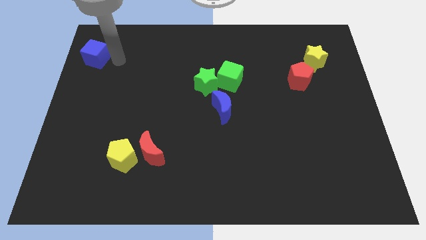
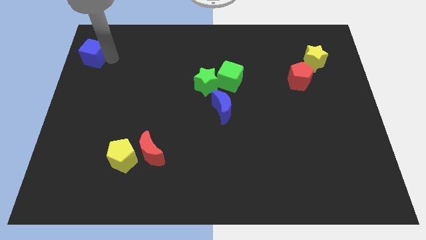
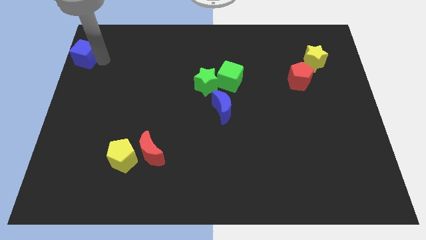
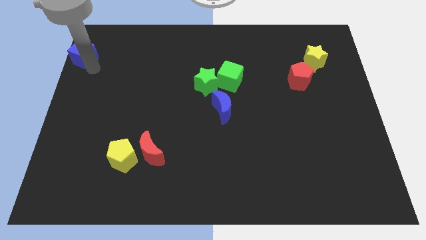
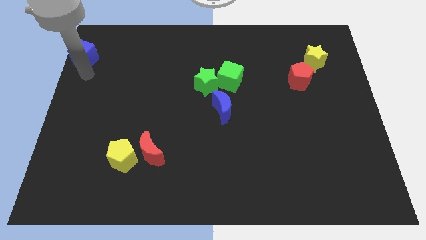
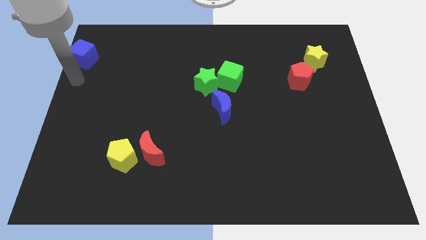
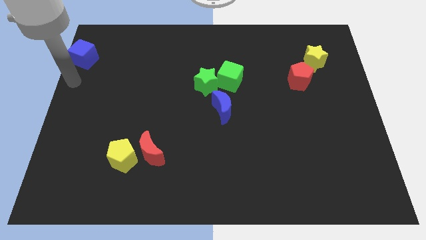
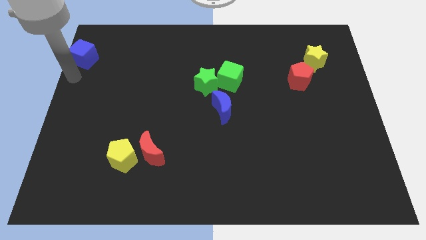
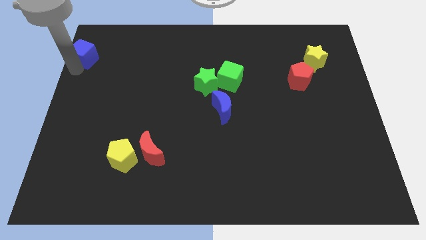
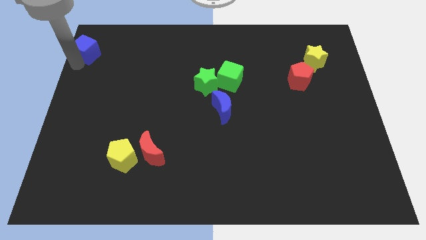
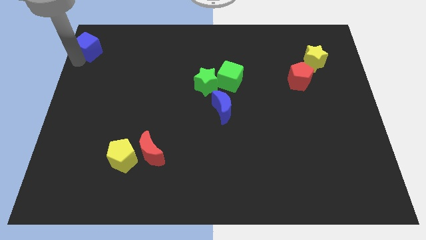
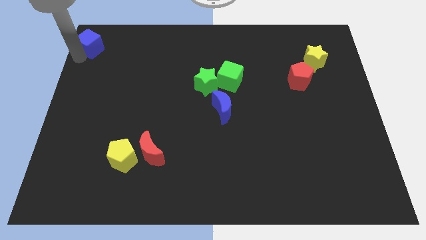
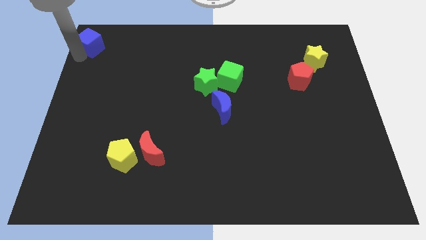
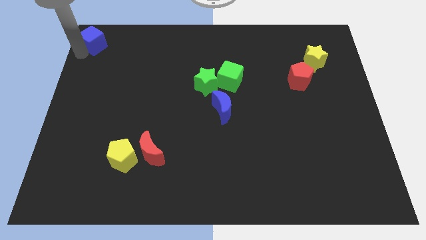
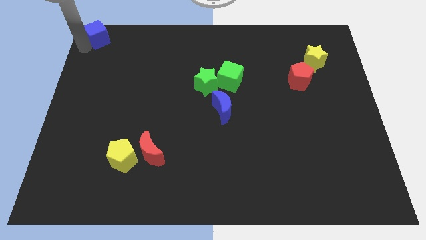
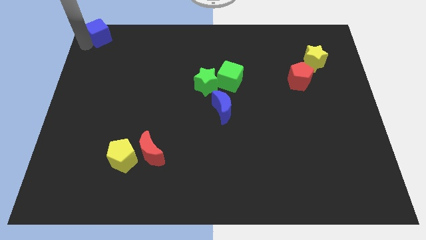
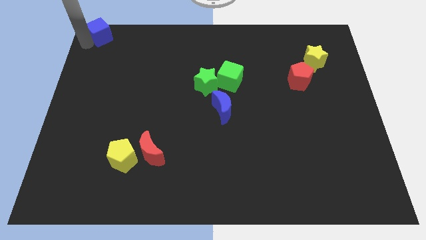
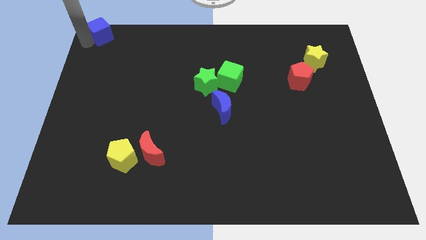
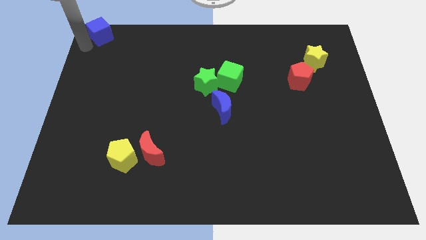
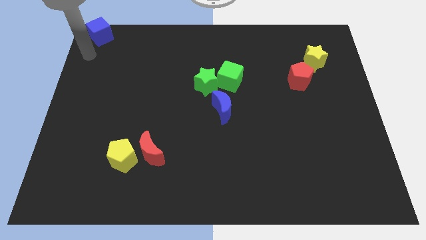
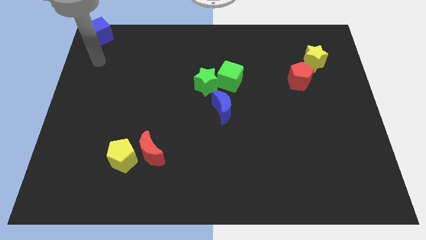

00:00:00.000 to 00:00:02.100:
slide blue cube to the top left

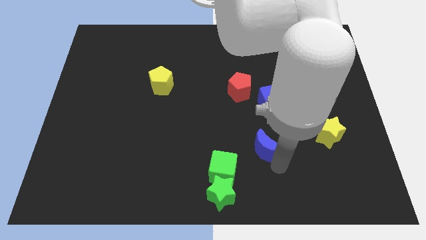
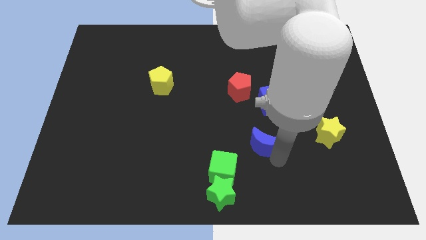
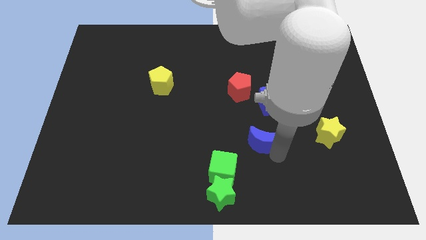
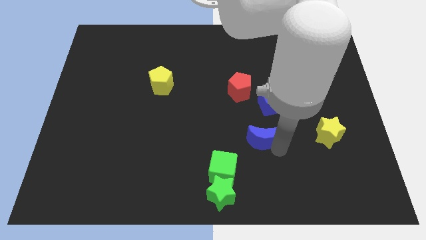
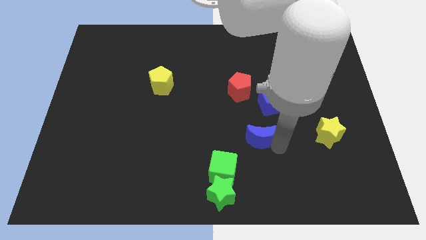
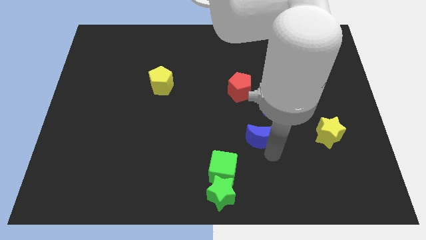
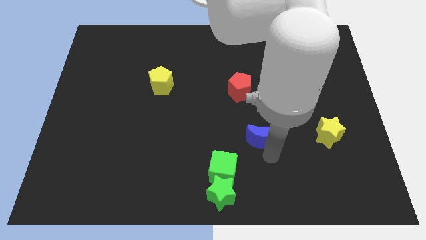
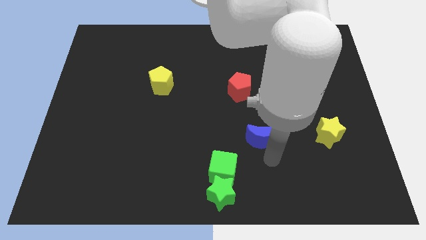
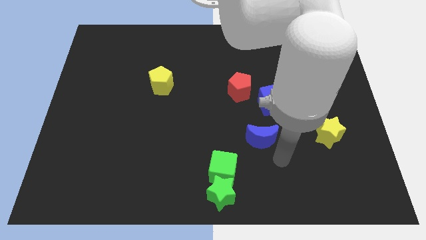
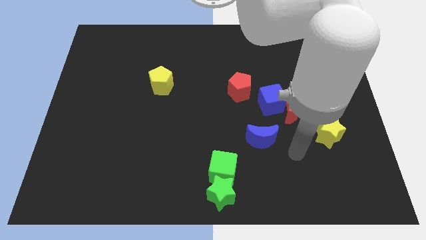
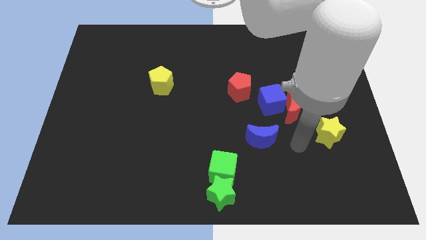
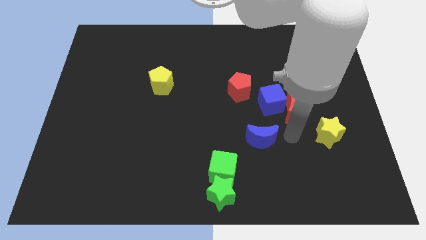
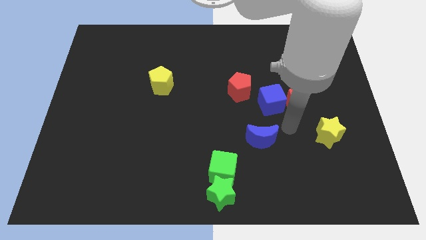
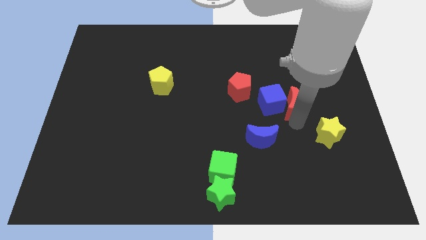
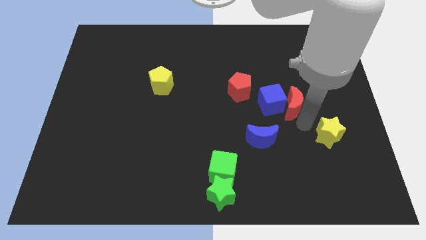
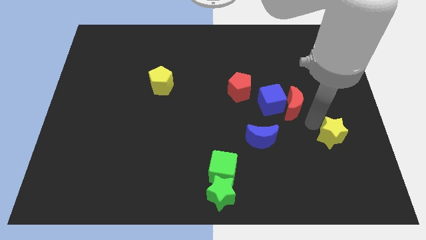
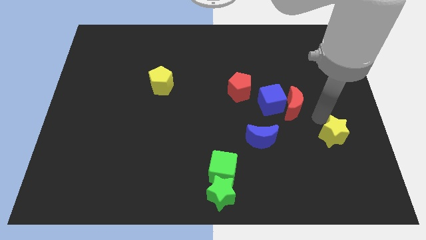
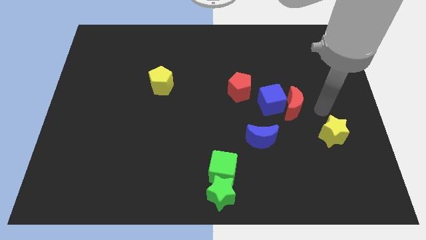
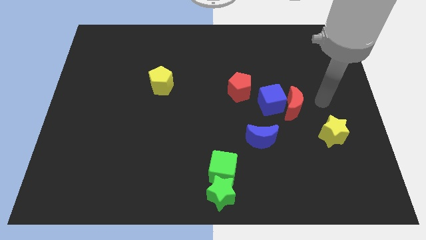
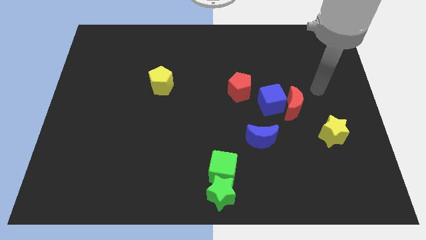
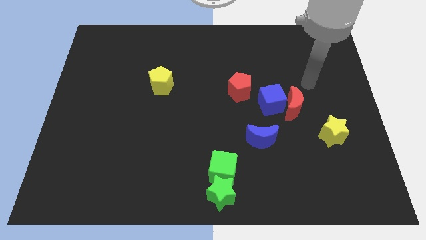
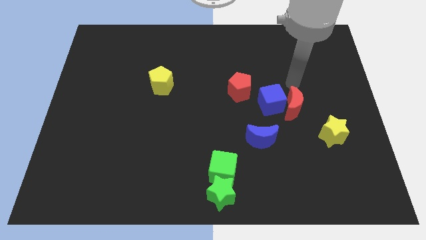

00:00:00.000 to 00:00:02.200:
slightly push the yellow star

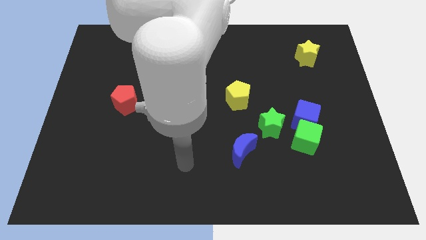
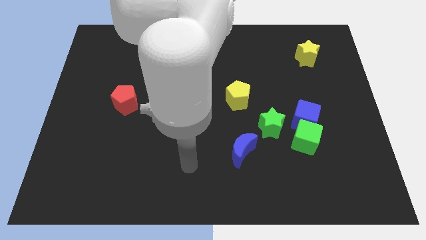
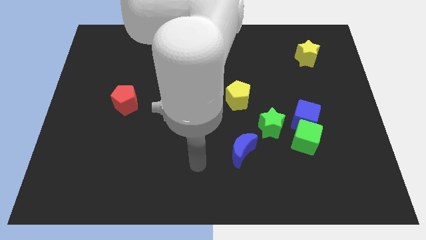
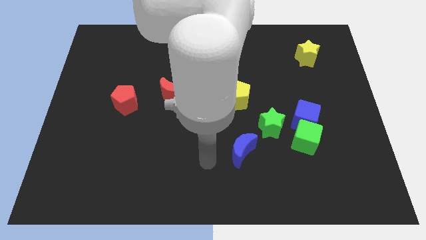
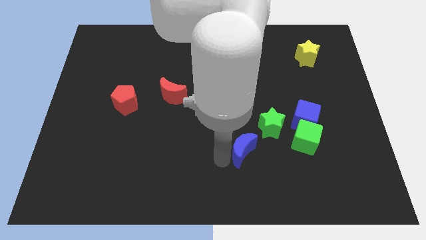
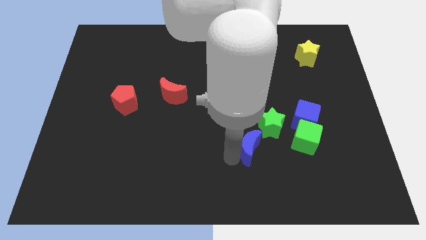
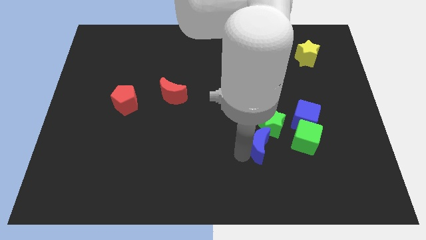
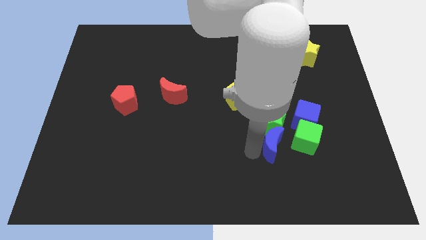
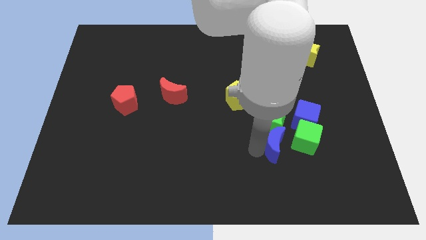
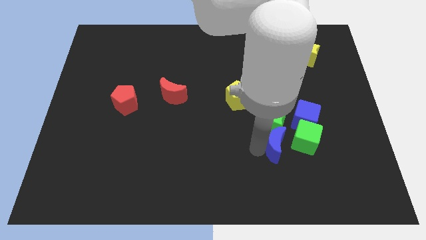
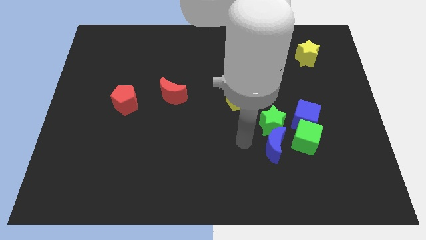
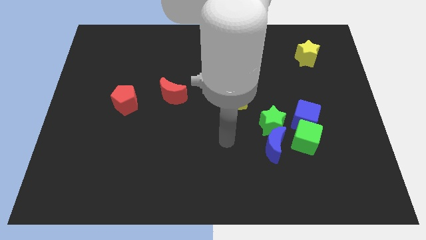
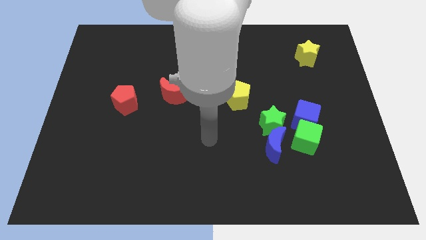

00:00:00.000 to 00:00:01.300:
slide the blue crescent into the green star

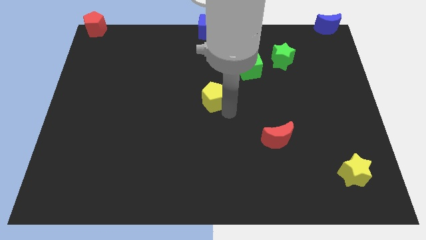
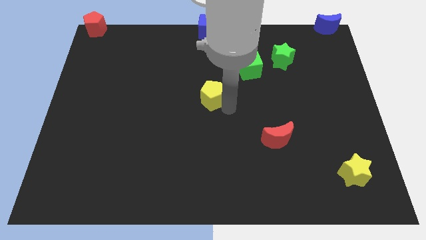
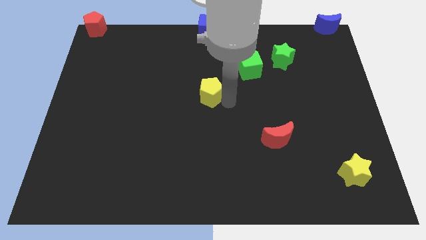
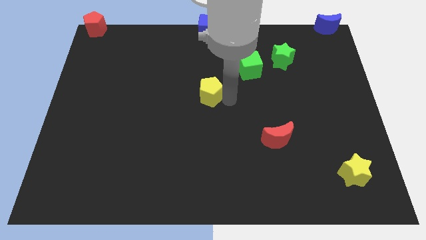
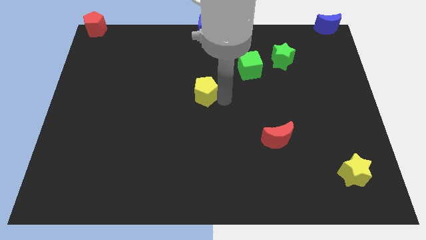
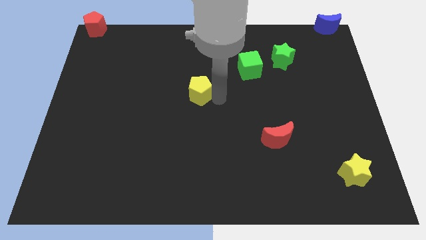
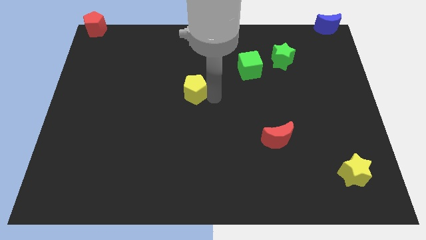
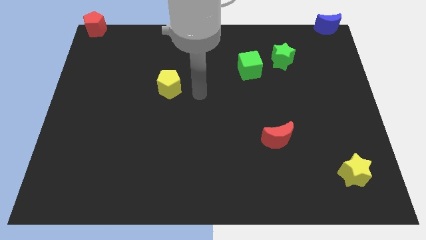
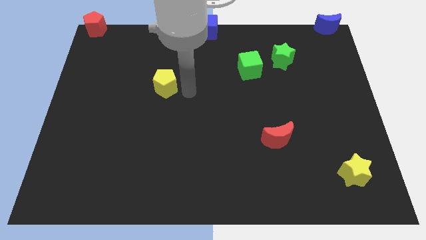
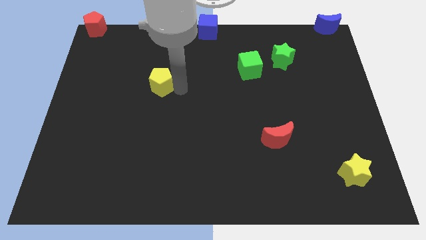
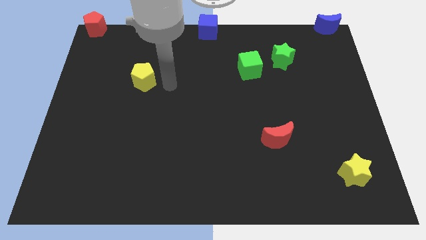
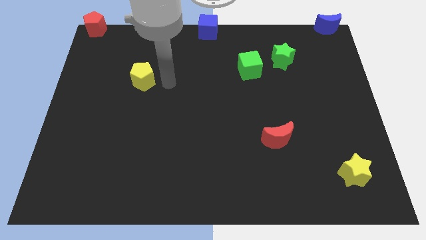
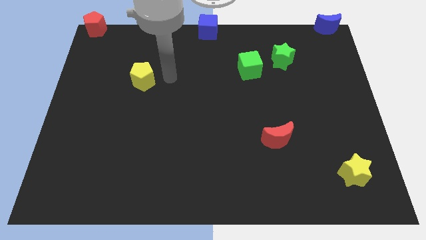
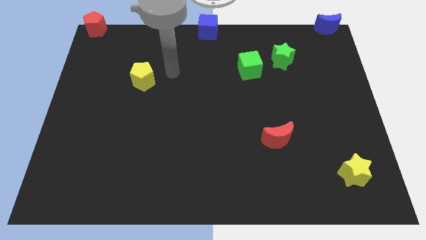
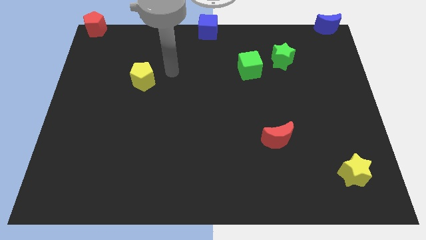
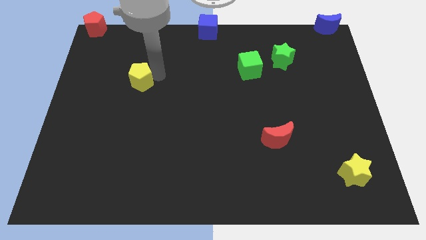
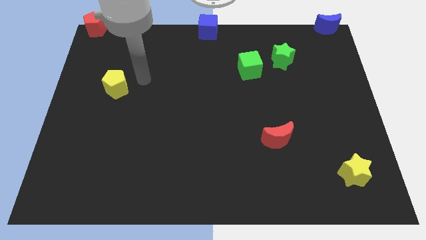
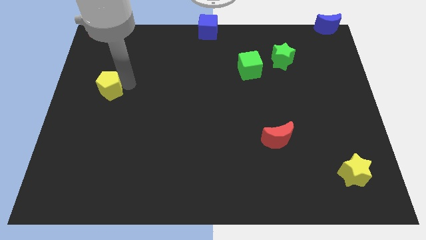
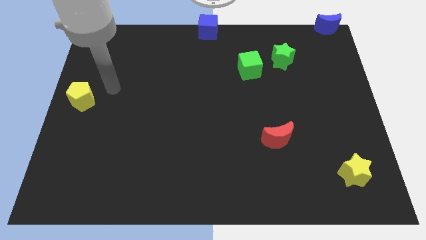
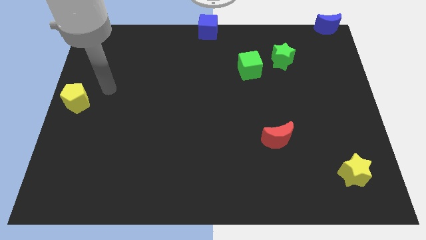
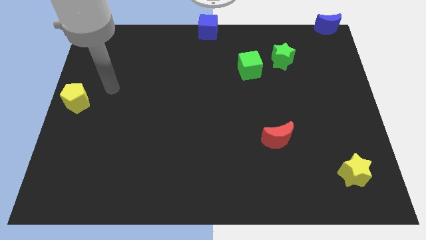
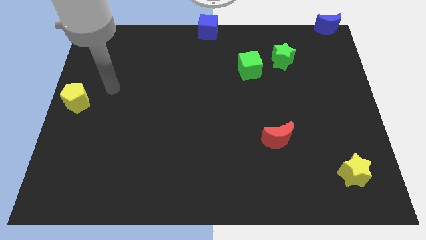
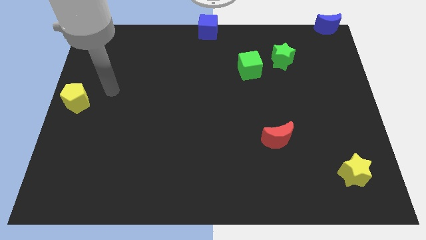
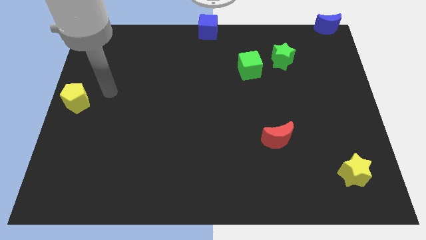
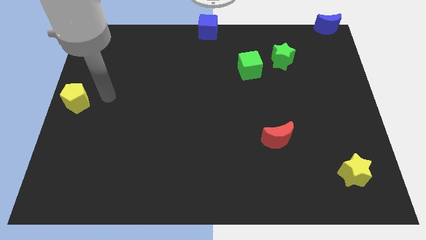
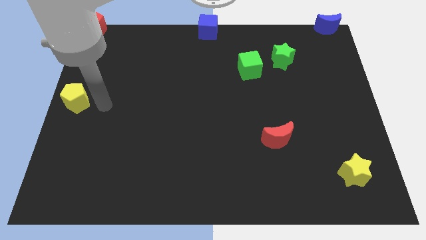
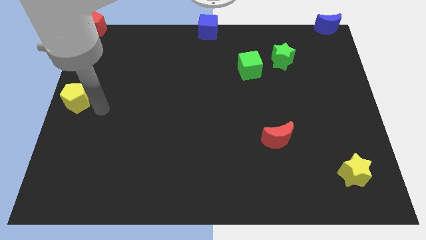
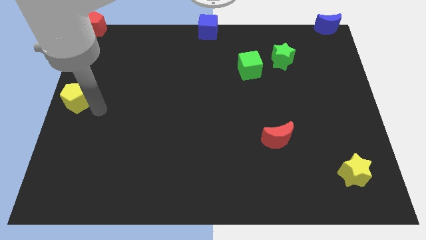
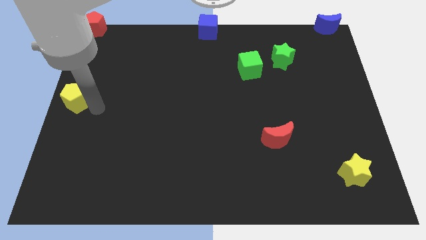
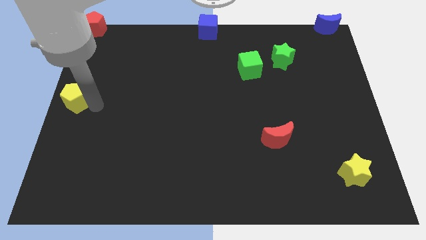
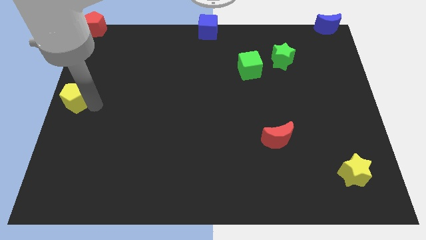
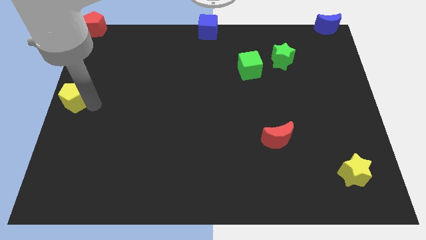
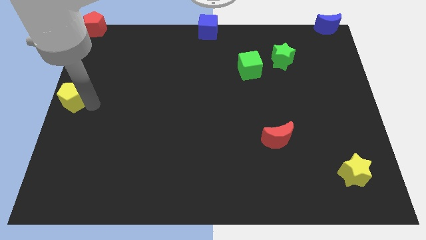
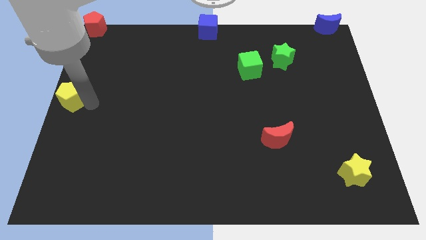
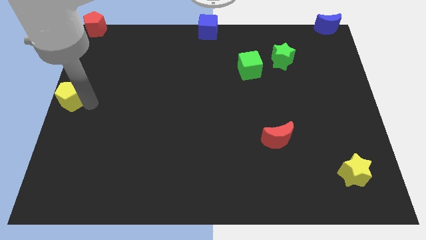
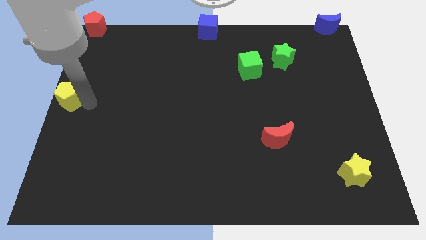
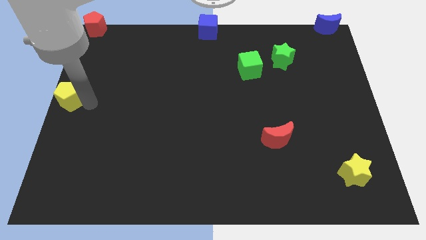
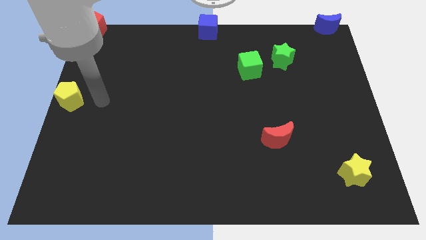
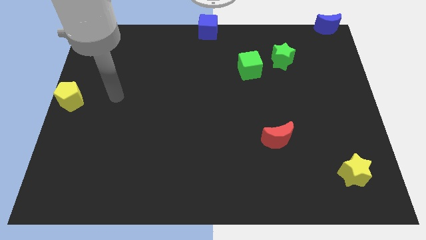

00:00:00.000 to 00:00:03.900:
place the yellow pentagon at the center left
